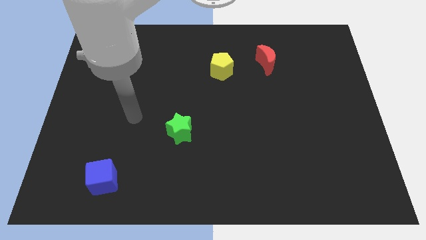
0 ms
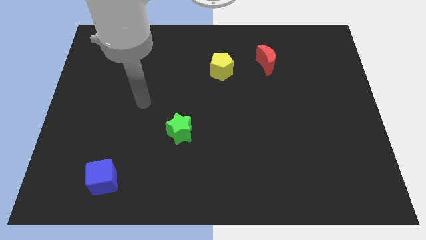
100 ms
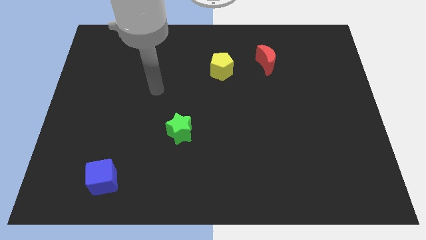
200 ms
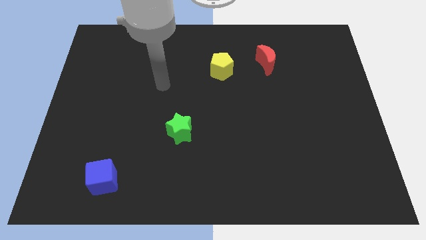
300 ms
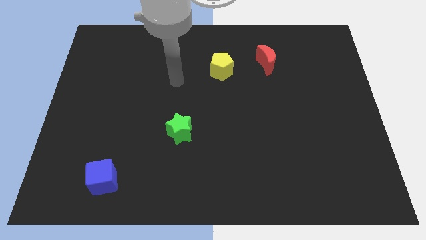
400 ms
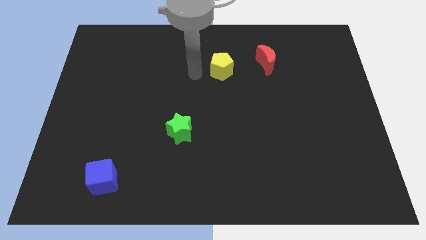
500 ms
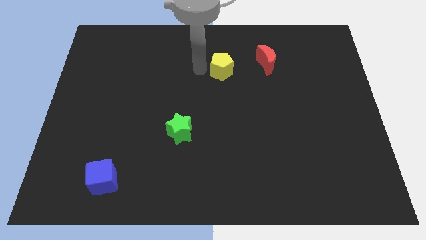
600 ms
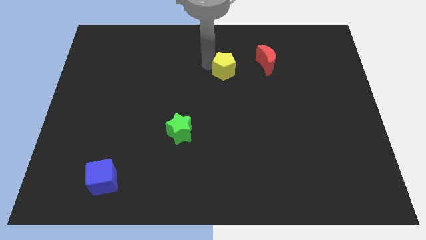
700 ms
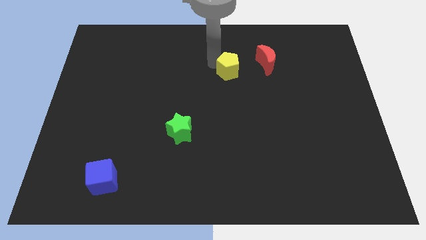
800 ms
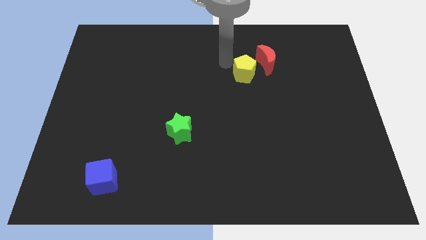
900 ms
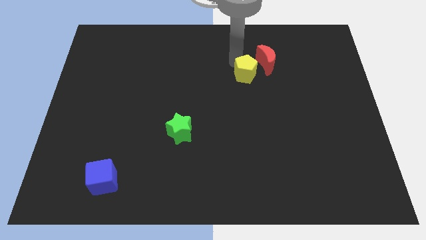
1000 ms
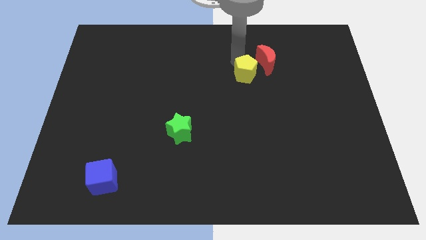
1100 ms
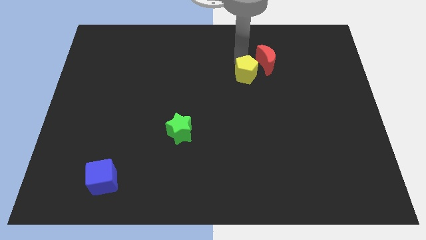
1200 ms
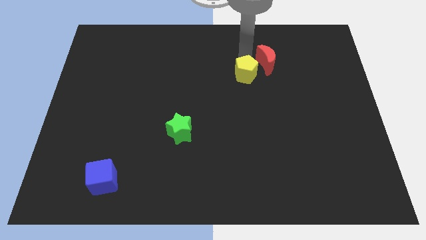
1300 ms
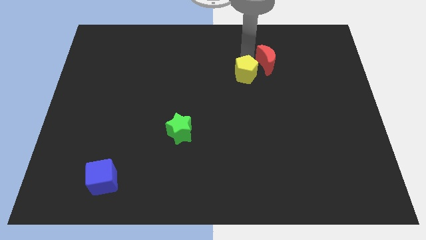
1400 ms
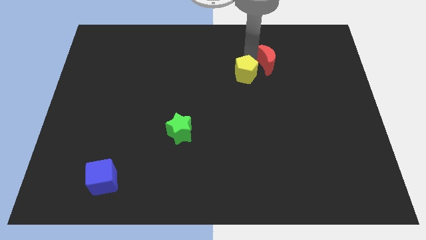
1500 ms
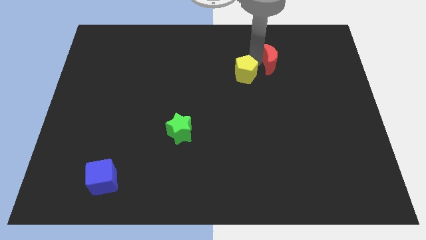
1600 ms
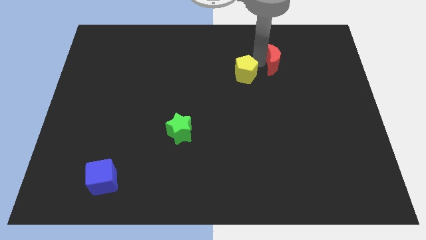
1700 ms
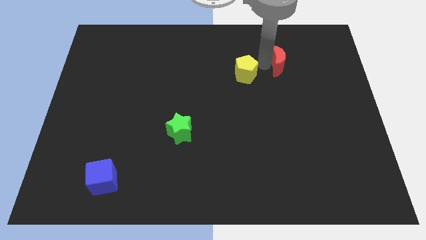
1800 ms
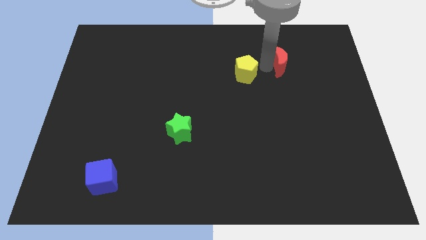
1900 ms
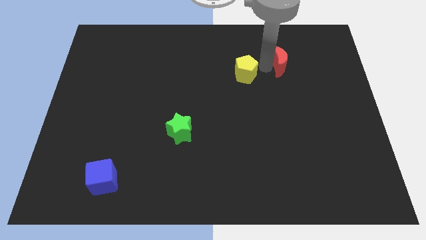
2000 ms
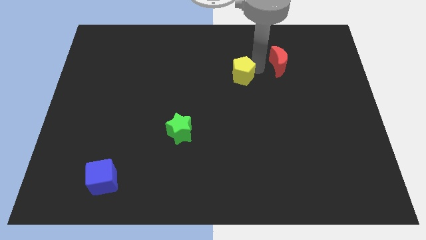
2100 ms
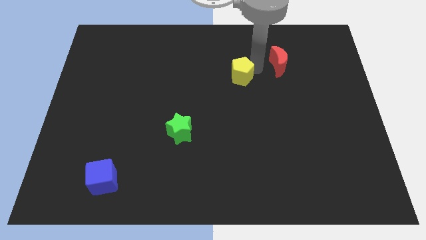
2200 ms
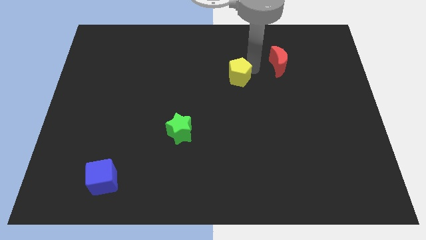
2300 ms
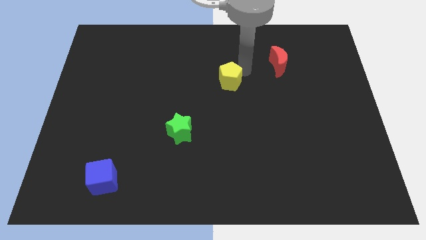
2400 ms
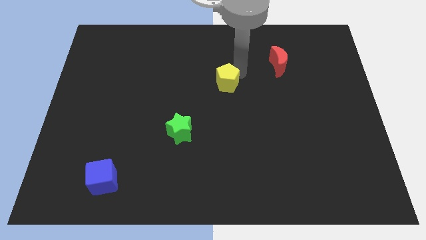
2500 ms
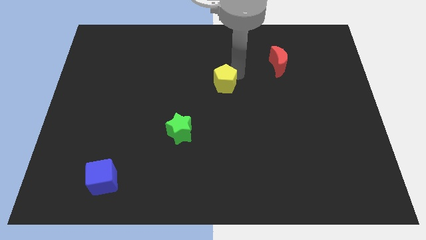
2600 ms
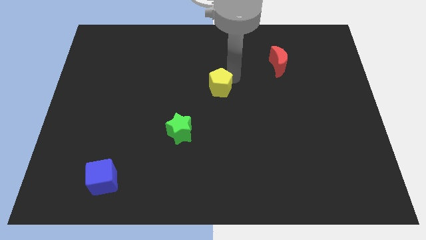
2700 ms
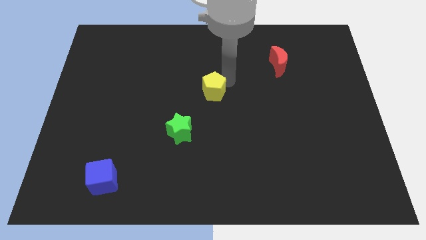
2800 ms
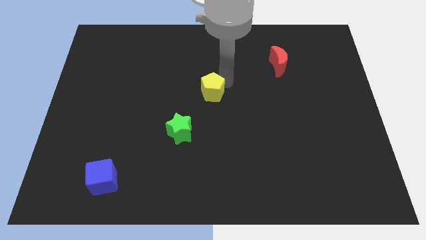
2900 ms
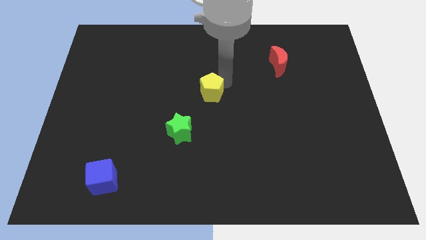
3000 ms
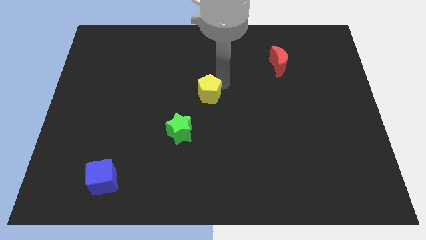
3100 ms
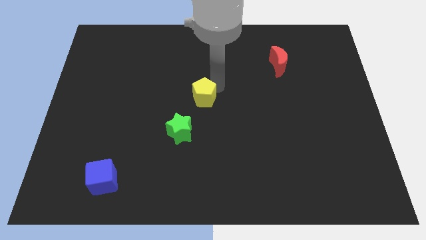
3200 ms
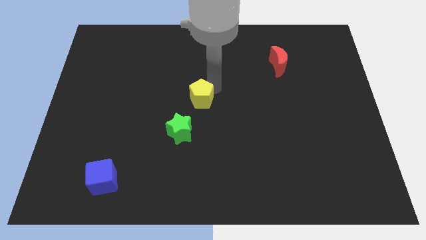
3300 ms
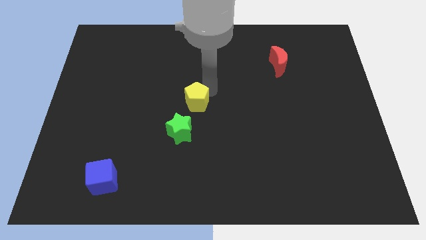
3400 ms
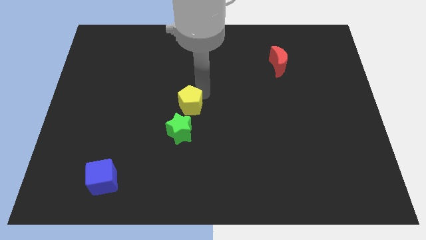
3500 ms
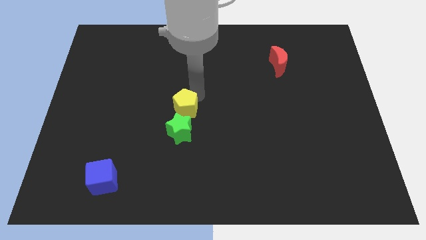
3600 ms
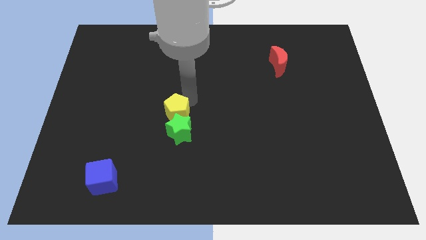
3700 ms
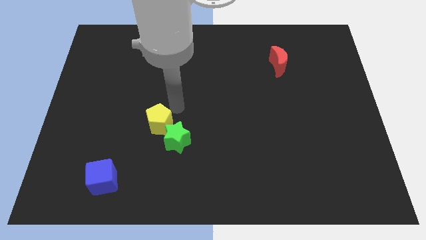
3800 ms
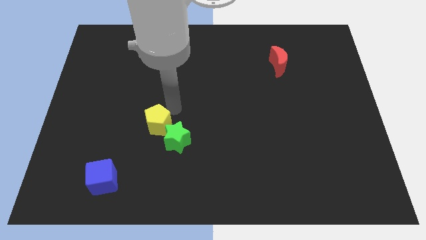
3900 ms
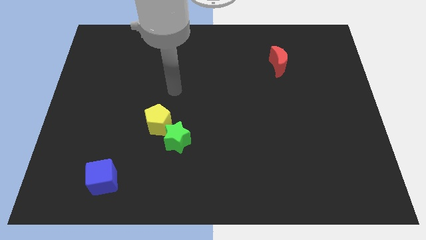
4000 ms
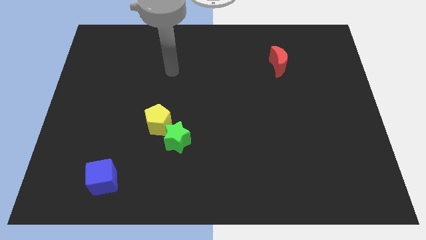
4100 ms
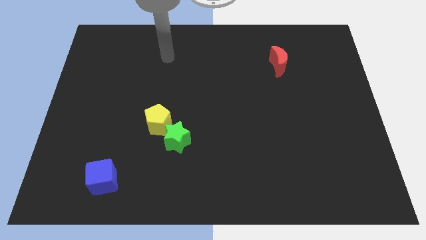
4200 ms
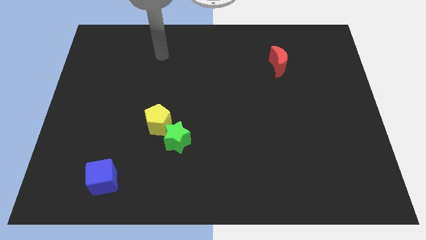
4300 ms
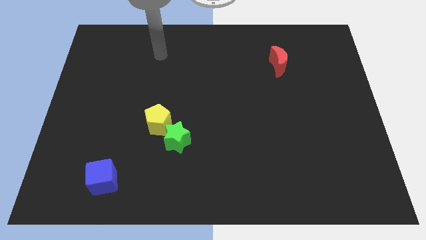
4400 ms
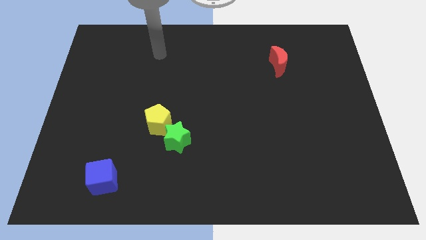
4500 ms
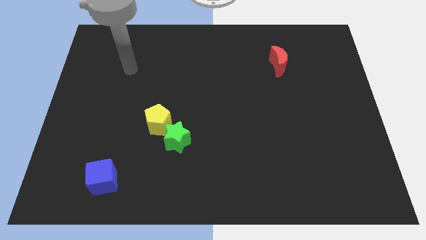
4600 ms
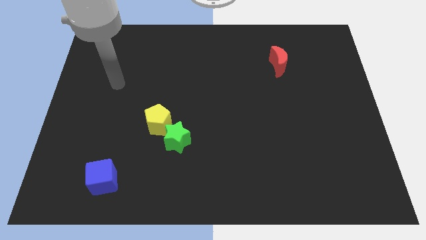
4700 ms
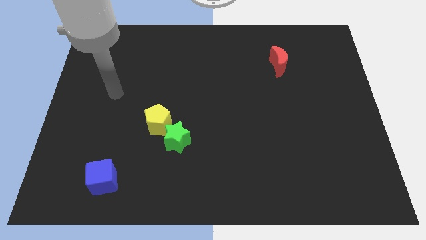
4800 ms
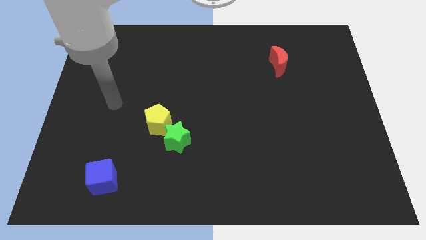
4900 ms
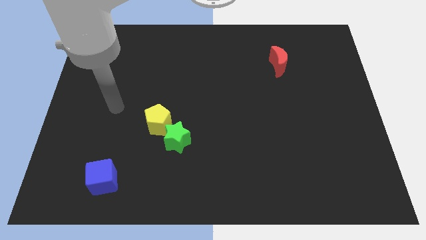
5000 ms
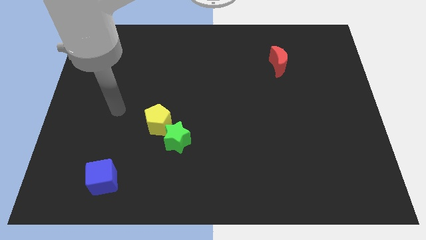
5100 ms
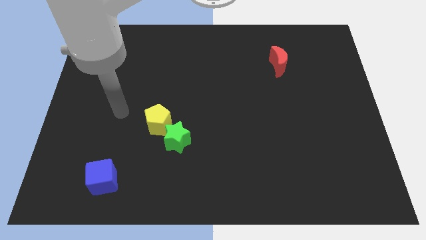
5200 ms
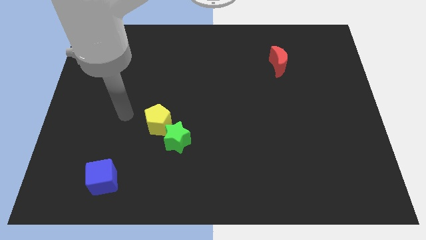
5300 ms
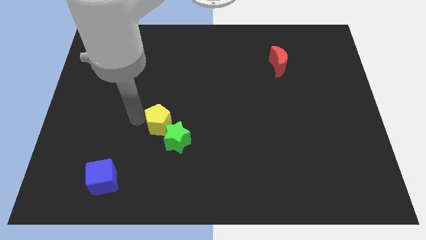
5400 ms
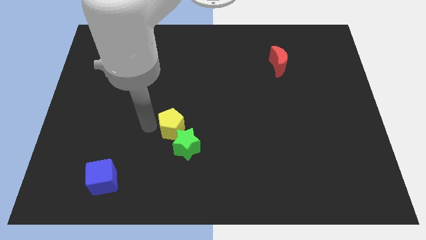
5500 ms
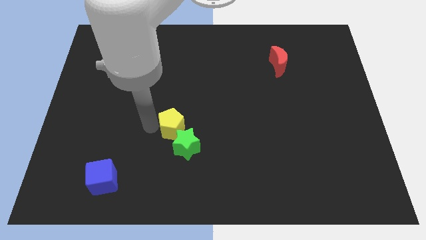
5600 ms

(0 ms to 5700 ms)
slide the pentagon to the green star

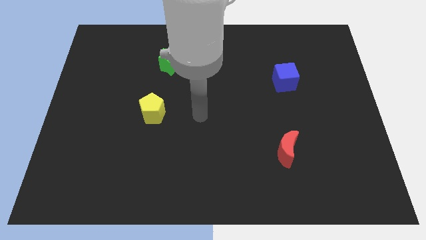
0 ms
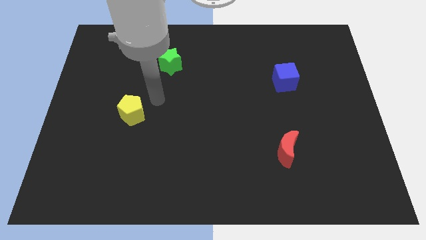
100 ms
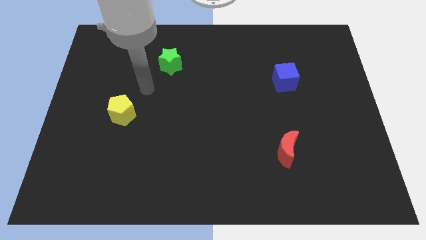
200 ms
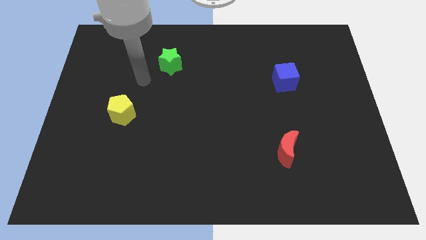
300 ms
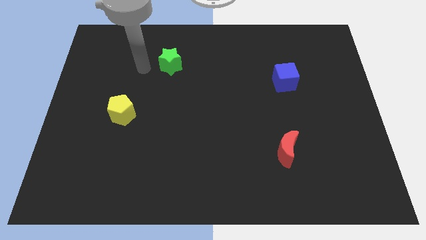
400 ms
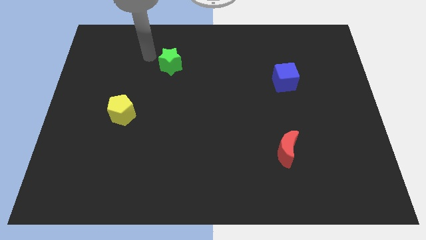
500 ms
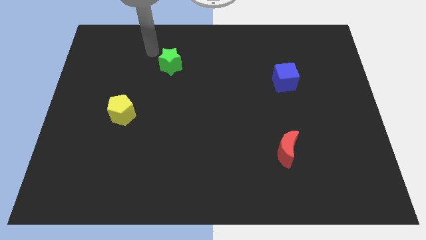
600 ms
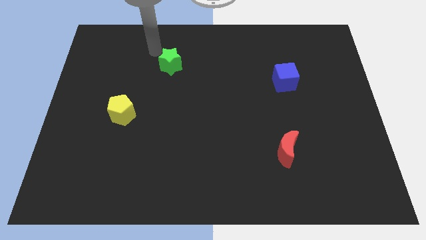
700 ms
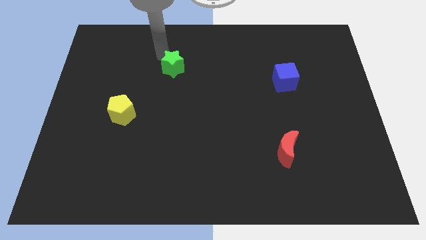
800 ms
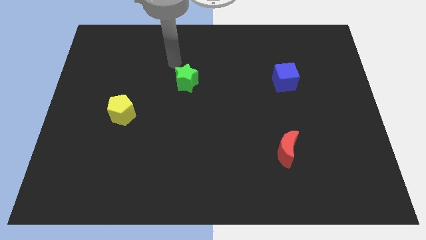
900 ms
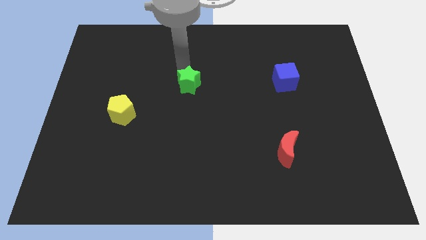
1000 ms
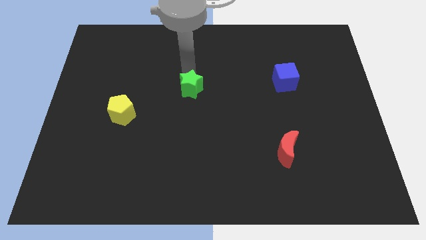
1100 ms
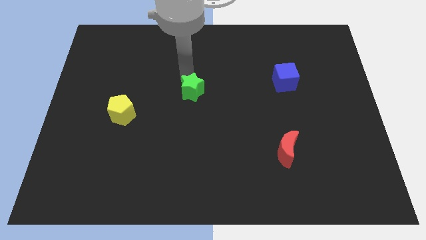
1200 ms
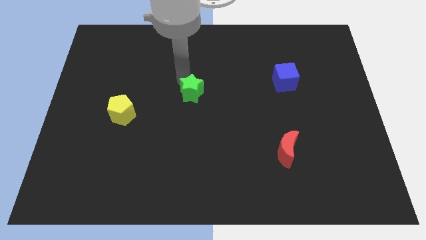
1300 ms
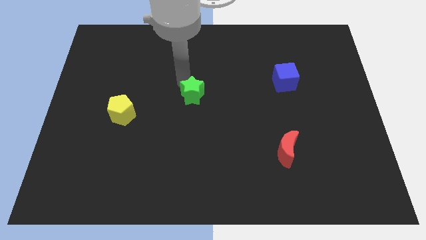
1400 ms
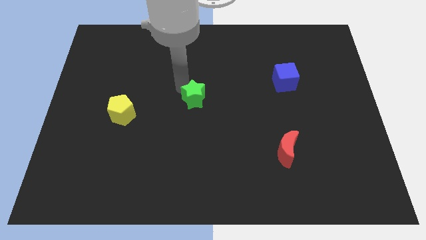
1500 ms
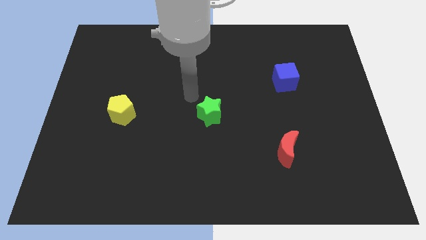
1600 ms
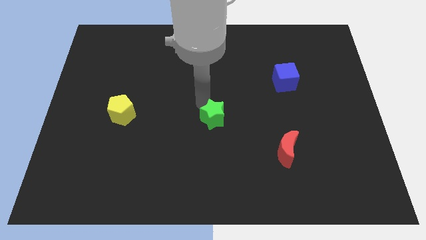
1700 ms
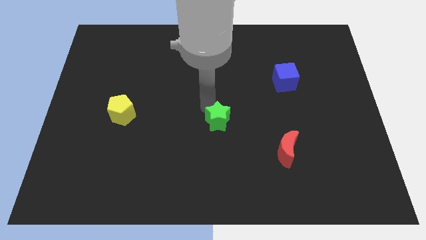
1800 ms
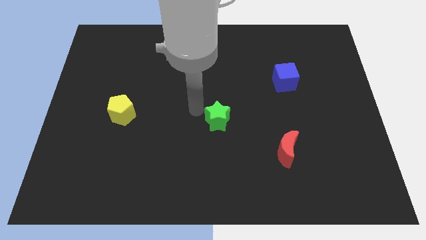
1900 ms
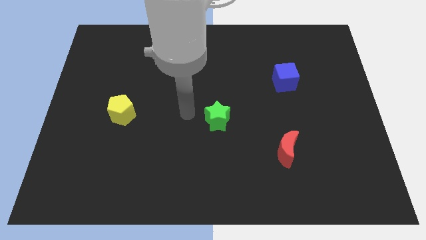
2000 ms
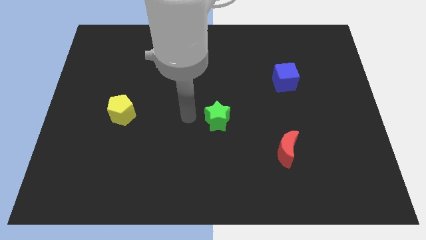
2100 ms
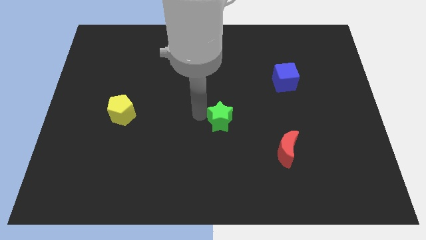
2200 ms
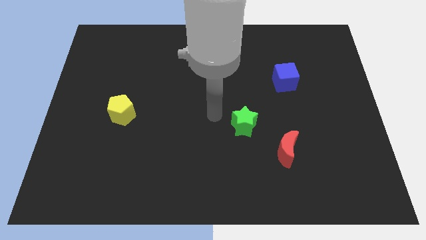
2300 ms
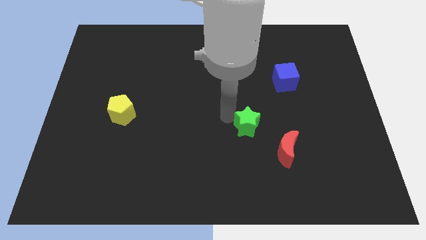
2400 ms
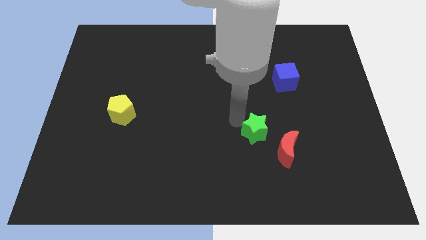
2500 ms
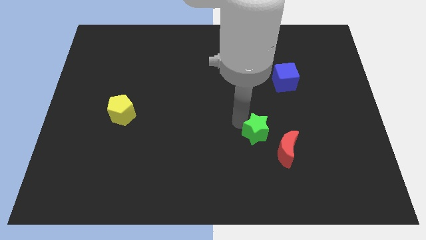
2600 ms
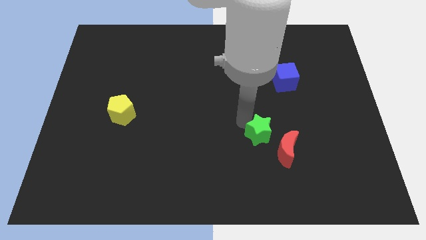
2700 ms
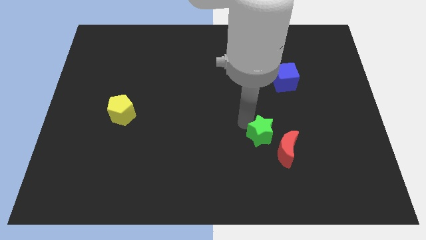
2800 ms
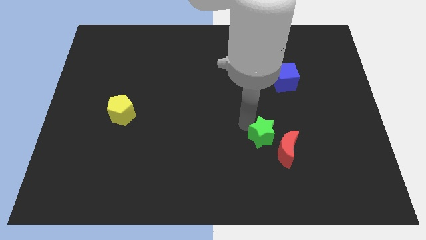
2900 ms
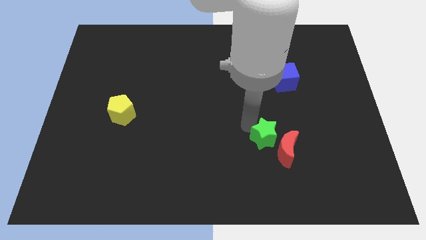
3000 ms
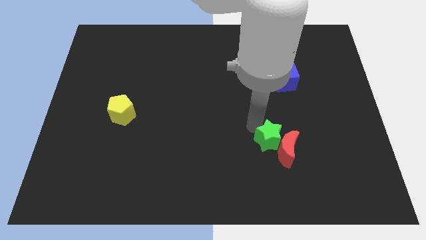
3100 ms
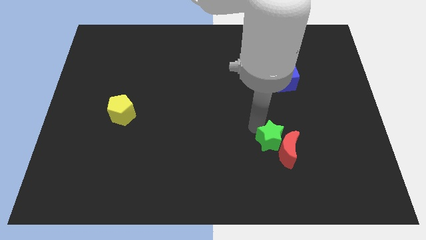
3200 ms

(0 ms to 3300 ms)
push the green star to the red moon
